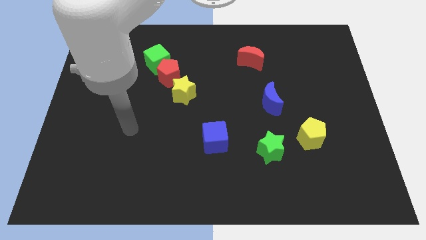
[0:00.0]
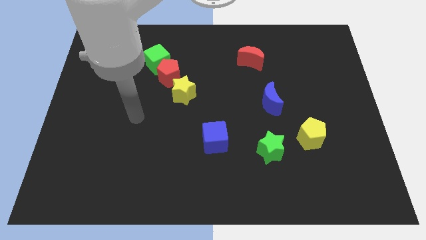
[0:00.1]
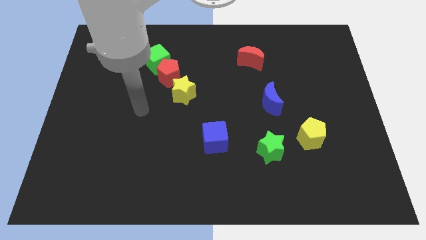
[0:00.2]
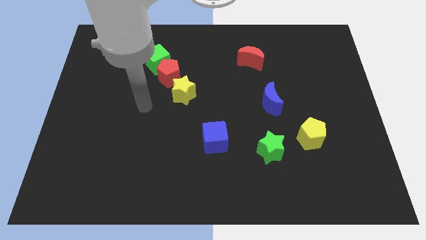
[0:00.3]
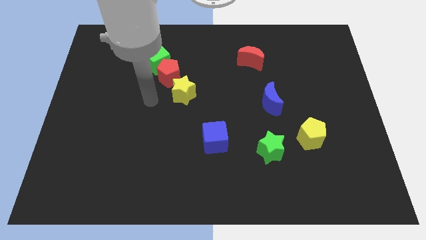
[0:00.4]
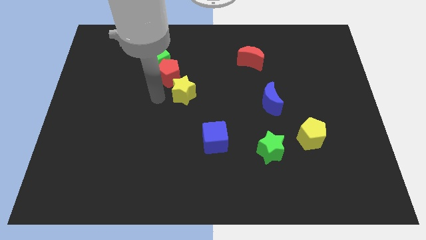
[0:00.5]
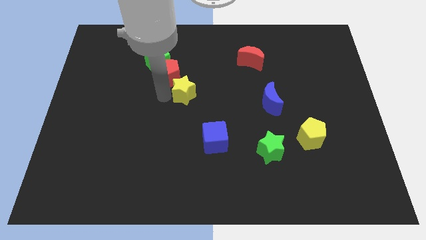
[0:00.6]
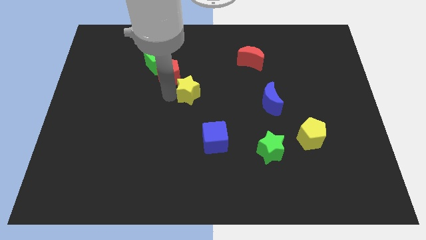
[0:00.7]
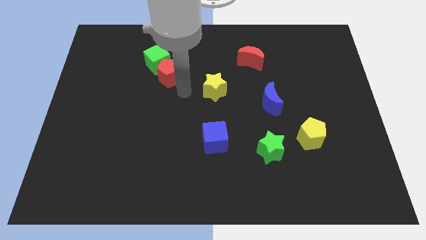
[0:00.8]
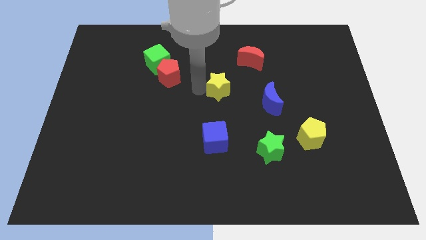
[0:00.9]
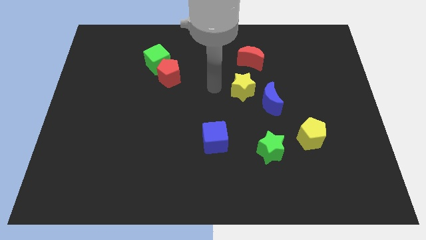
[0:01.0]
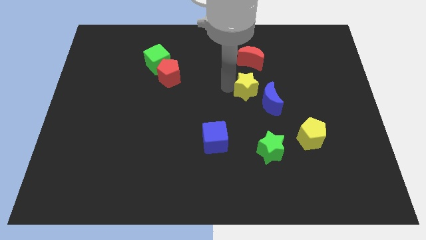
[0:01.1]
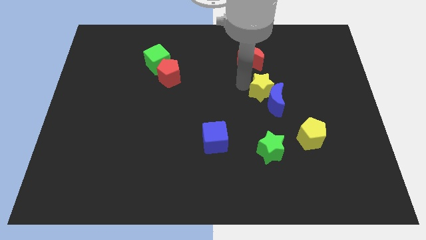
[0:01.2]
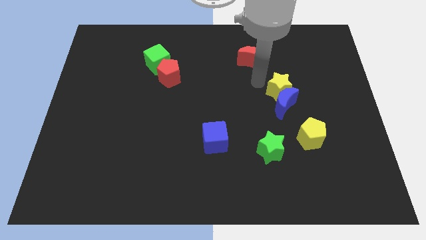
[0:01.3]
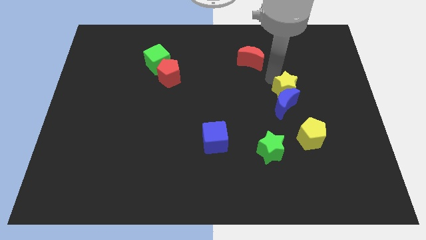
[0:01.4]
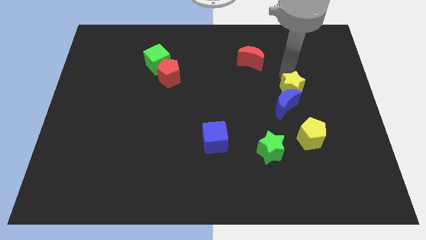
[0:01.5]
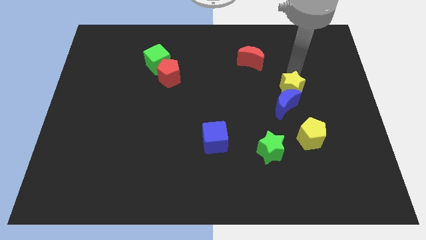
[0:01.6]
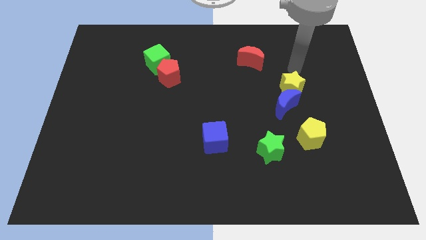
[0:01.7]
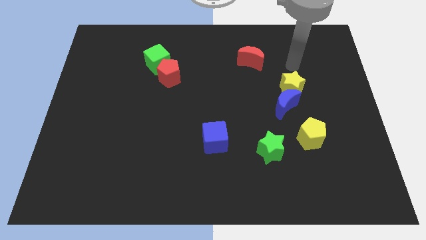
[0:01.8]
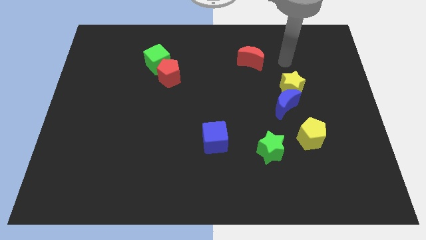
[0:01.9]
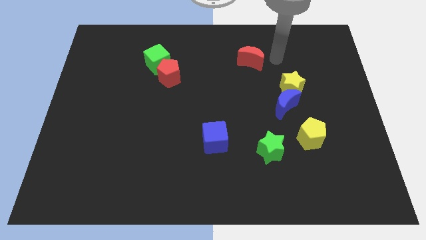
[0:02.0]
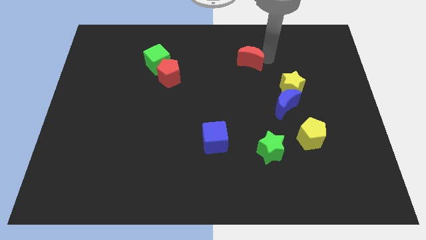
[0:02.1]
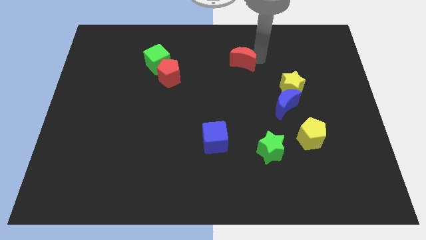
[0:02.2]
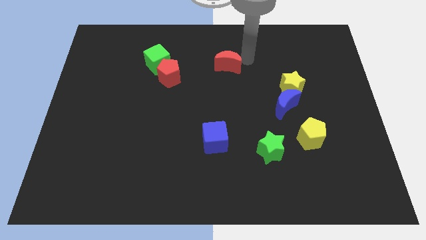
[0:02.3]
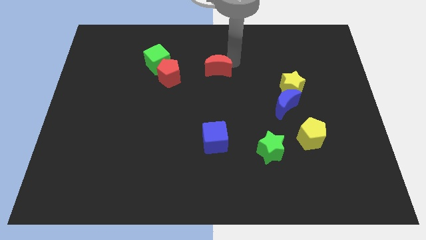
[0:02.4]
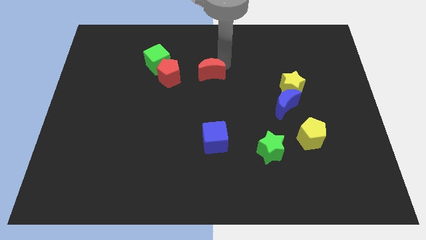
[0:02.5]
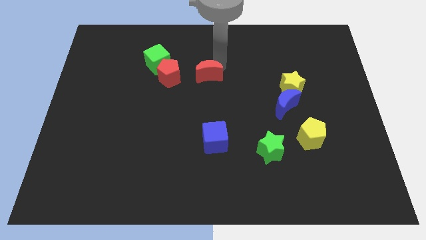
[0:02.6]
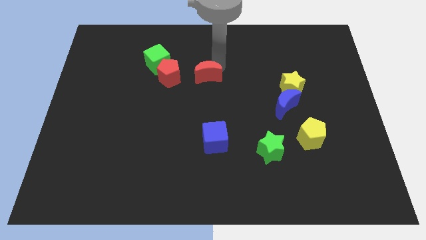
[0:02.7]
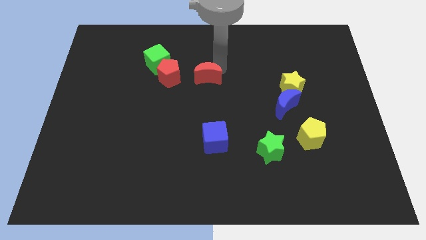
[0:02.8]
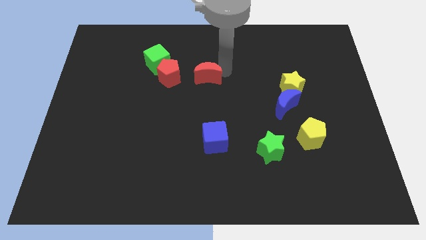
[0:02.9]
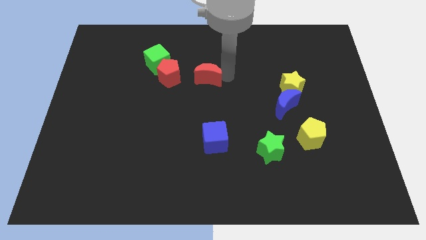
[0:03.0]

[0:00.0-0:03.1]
move the yellow star parallel right to the red moon

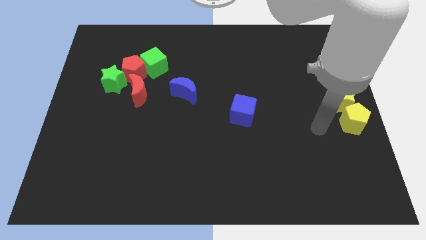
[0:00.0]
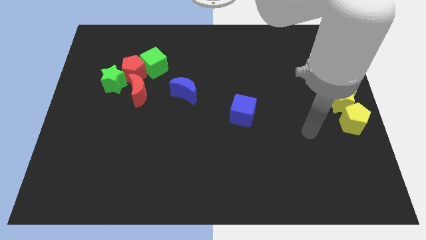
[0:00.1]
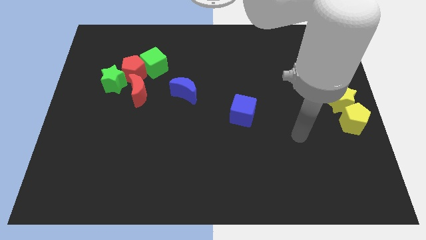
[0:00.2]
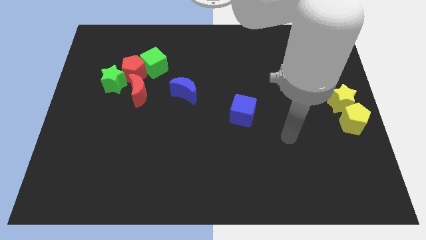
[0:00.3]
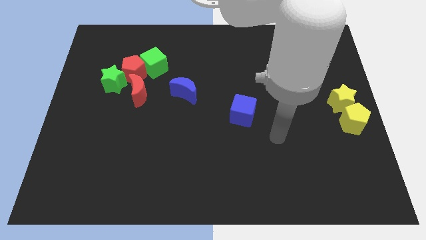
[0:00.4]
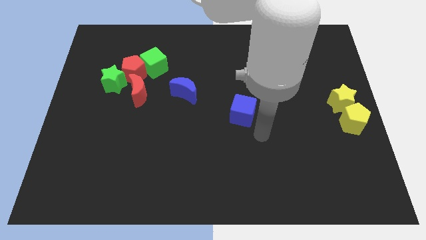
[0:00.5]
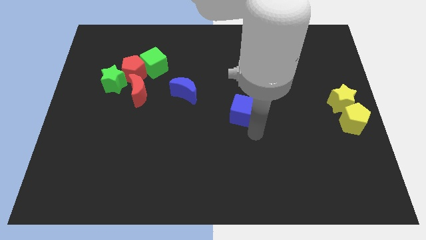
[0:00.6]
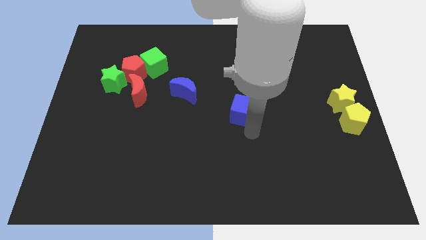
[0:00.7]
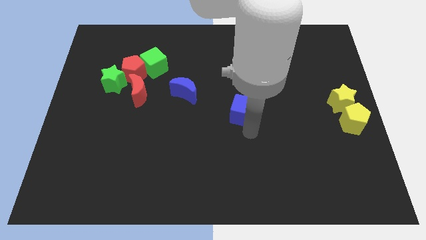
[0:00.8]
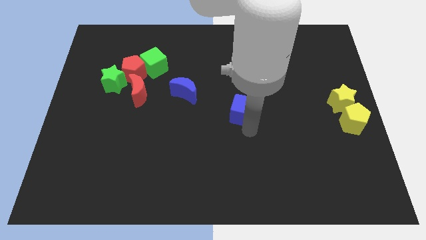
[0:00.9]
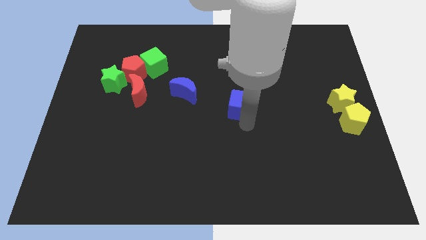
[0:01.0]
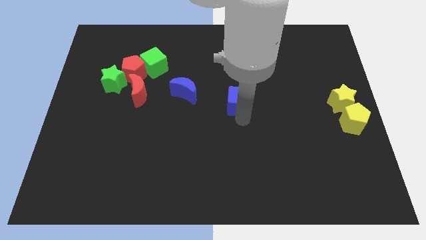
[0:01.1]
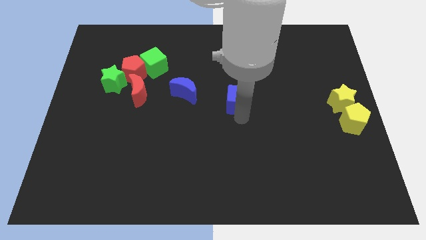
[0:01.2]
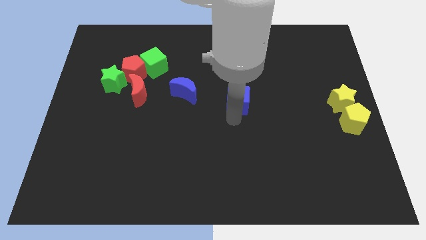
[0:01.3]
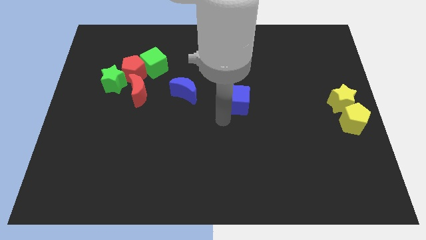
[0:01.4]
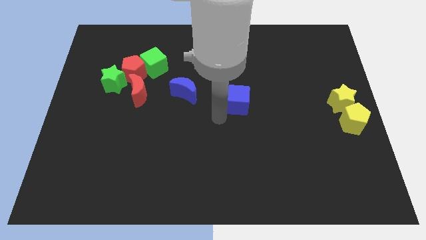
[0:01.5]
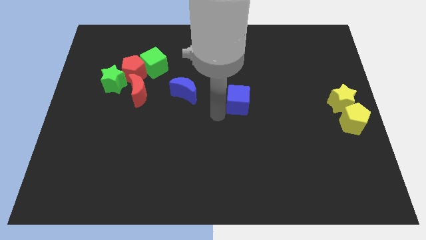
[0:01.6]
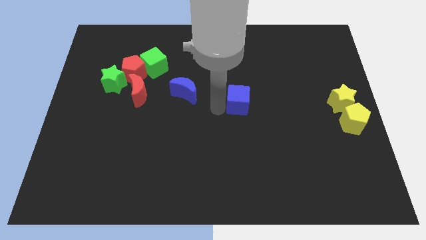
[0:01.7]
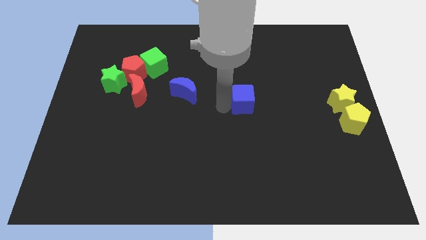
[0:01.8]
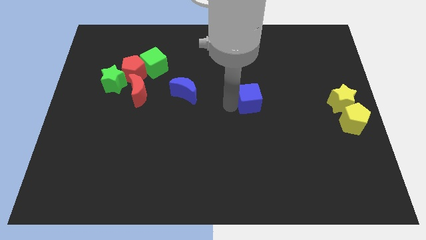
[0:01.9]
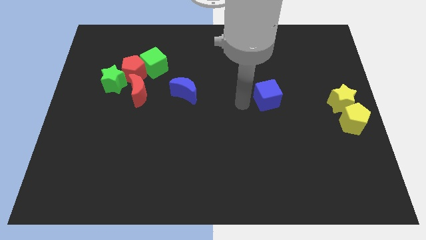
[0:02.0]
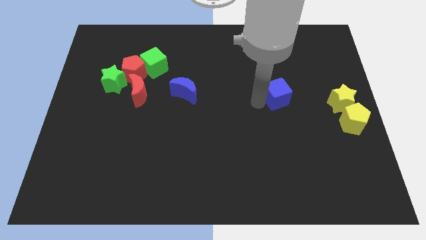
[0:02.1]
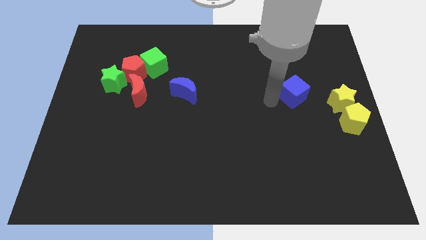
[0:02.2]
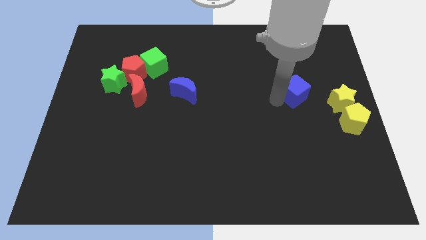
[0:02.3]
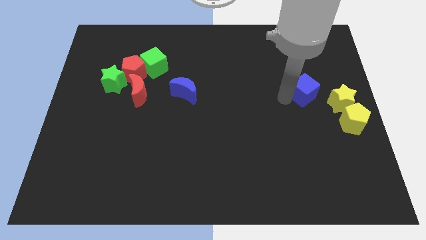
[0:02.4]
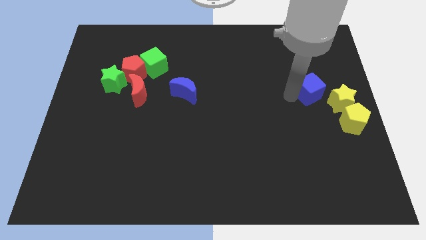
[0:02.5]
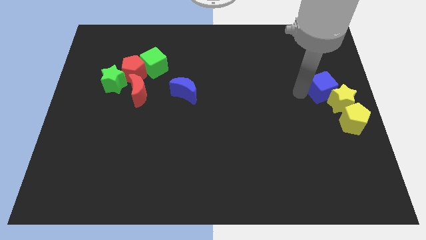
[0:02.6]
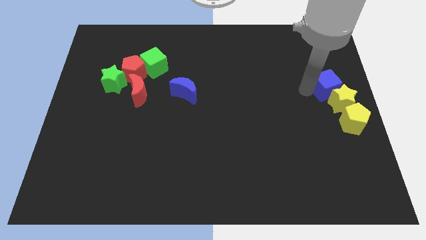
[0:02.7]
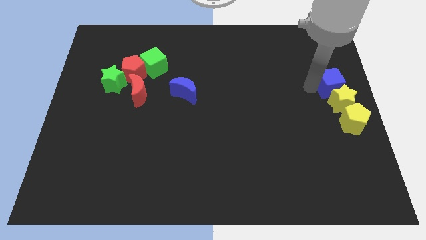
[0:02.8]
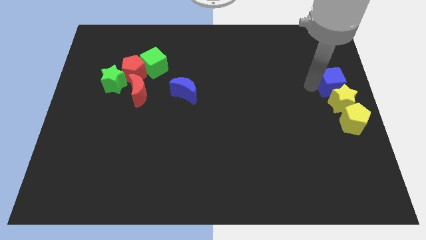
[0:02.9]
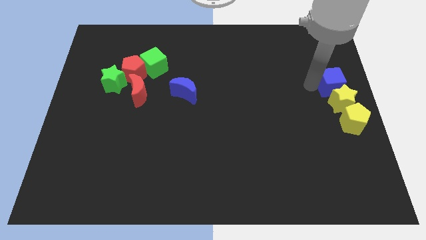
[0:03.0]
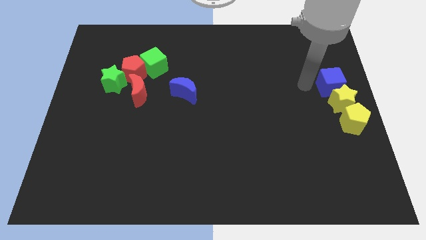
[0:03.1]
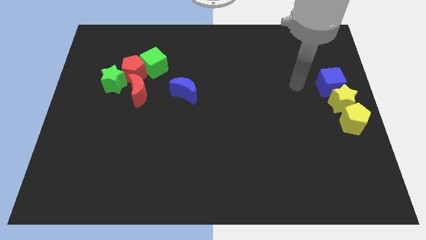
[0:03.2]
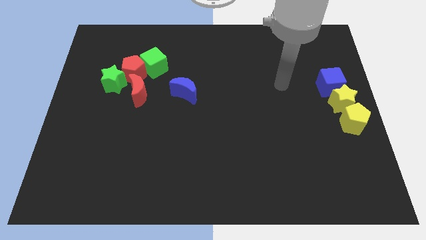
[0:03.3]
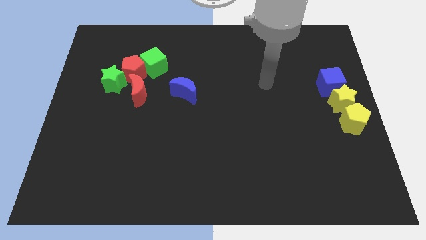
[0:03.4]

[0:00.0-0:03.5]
place the blue cube above the yellow star

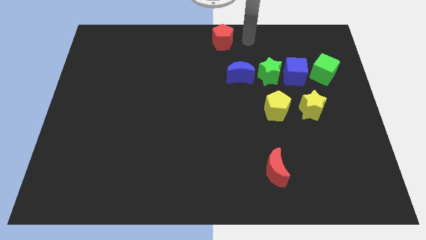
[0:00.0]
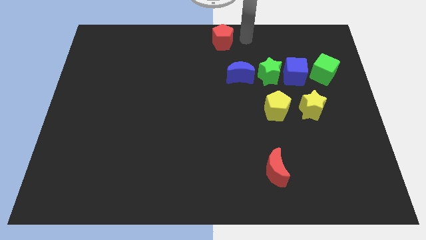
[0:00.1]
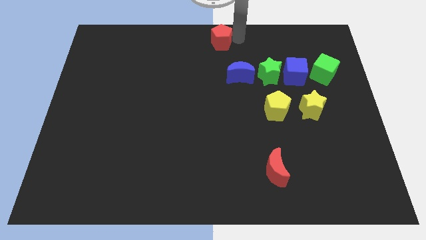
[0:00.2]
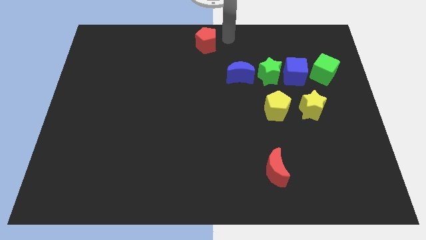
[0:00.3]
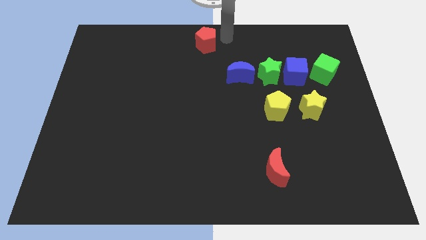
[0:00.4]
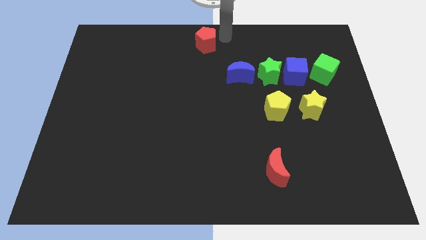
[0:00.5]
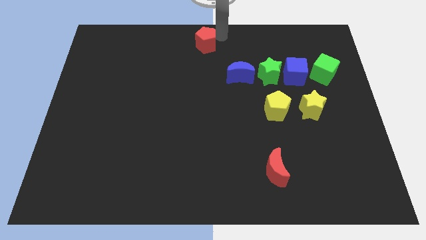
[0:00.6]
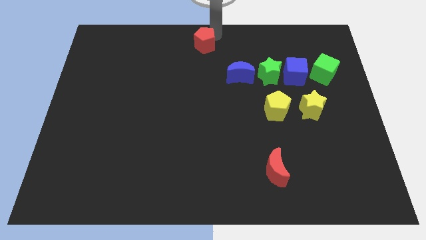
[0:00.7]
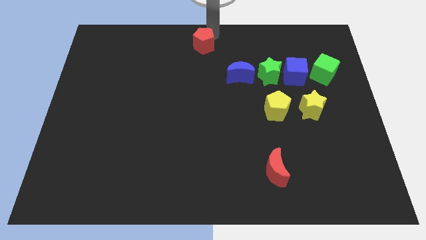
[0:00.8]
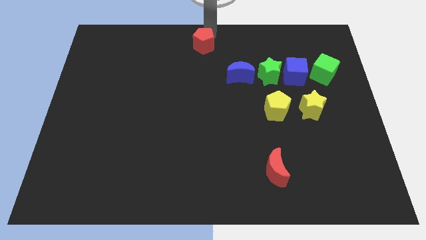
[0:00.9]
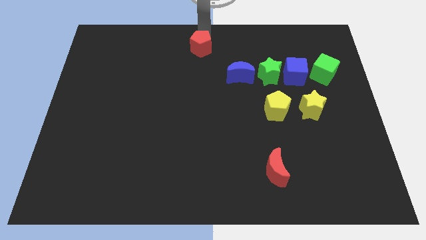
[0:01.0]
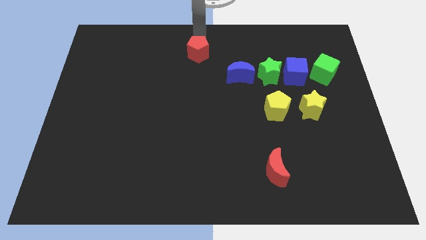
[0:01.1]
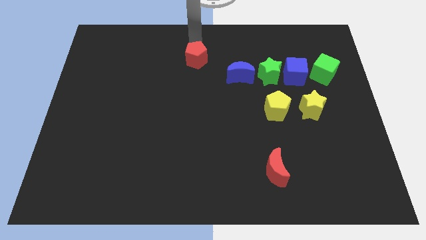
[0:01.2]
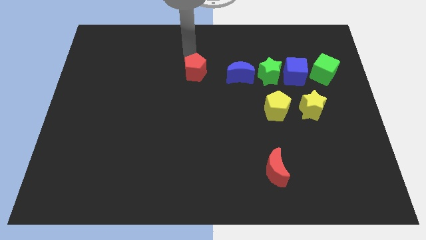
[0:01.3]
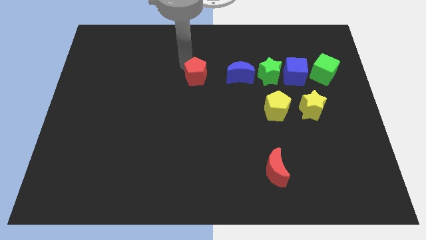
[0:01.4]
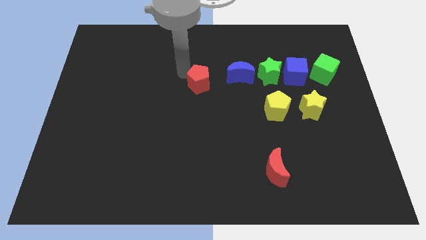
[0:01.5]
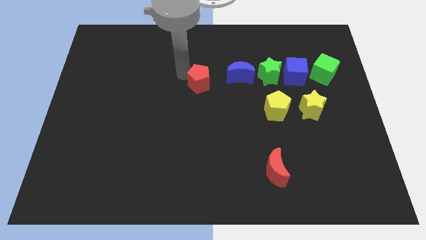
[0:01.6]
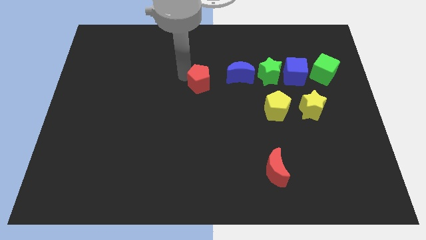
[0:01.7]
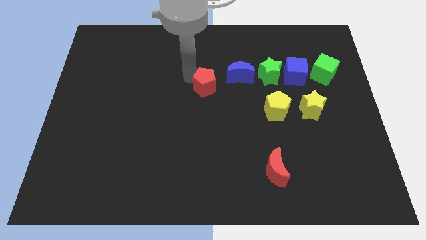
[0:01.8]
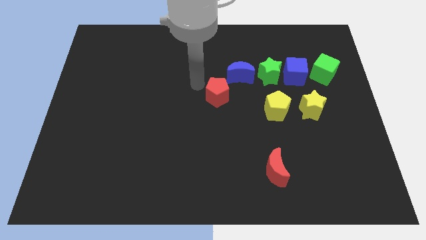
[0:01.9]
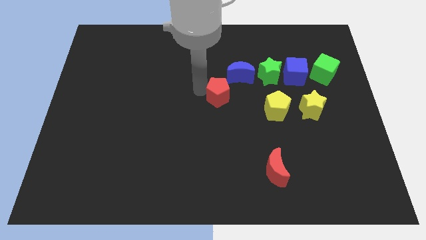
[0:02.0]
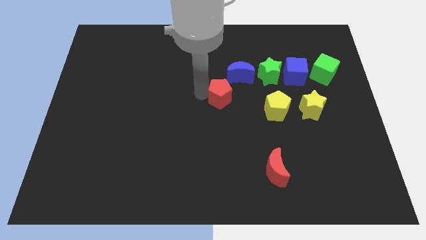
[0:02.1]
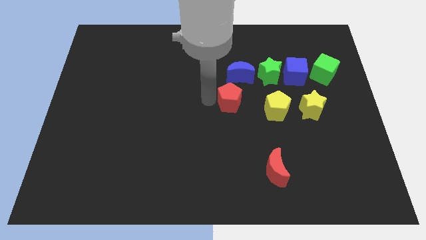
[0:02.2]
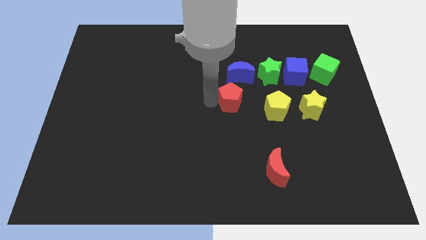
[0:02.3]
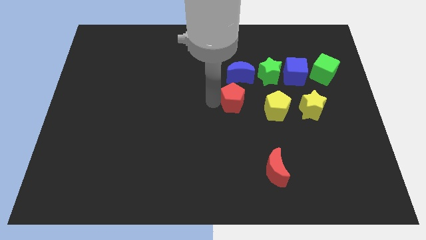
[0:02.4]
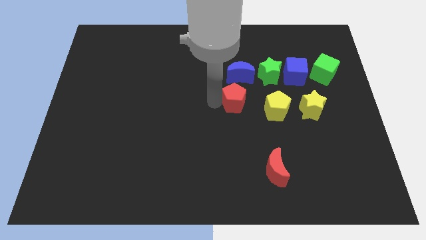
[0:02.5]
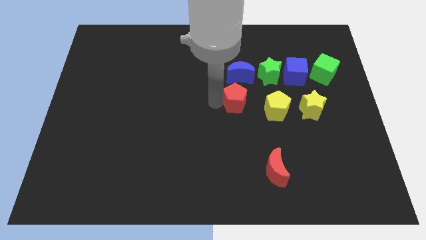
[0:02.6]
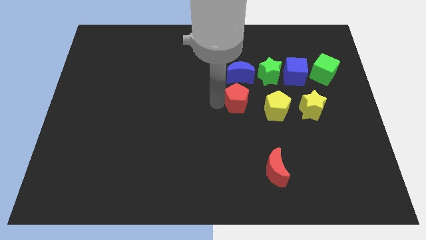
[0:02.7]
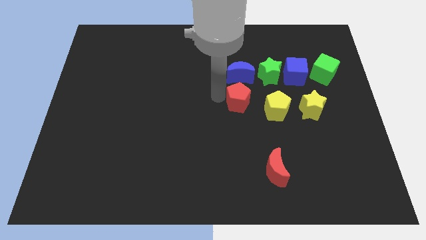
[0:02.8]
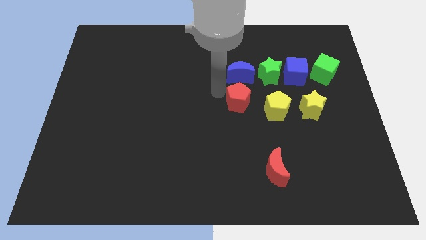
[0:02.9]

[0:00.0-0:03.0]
place red pentagon at center of the board
